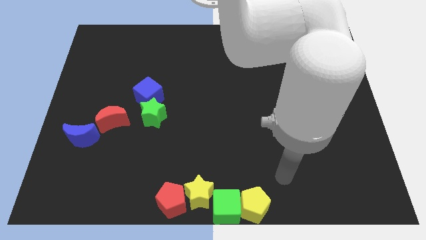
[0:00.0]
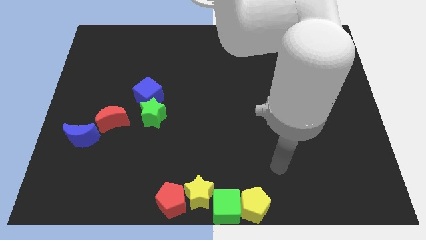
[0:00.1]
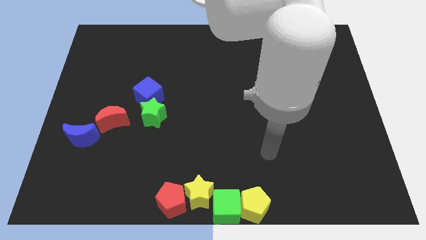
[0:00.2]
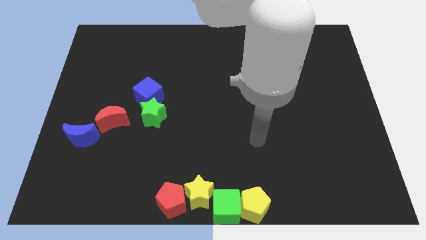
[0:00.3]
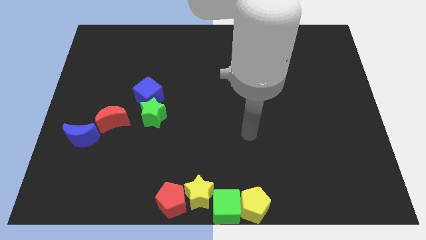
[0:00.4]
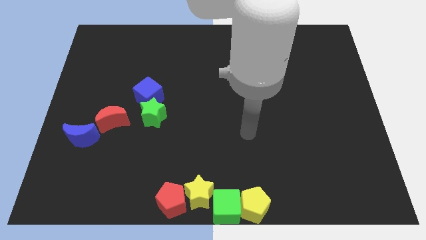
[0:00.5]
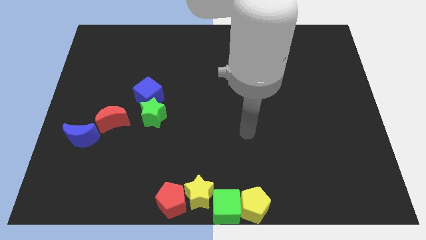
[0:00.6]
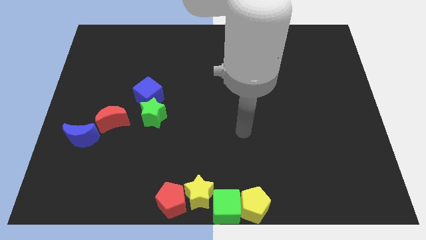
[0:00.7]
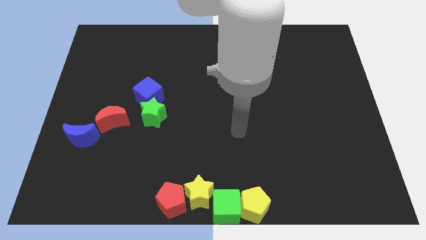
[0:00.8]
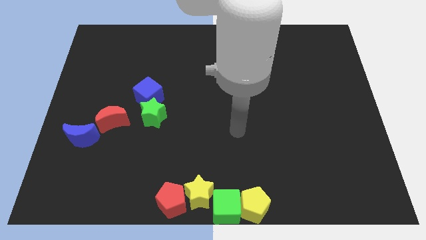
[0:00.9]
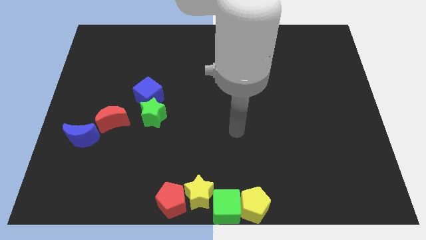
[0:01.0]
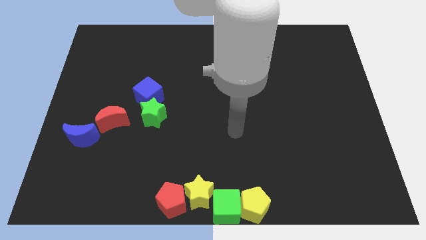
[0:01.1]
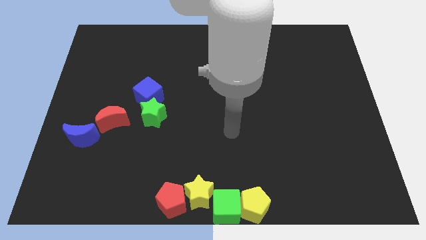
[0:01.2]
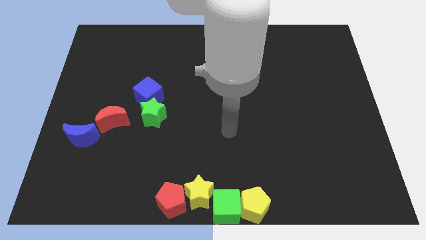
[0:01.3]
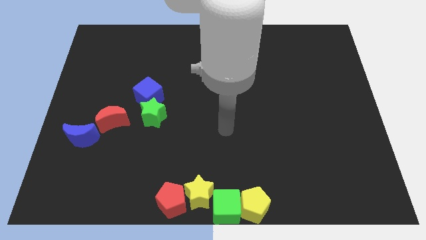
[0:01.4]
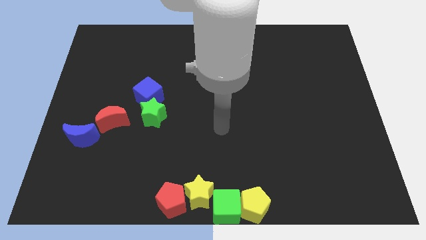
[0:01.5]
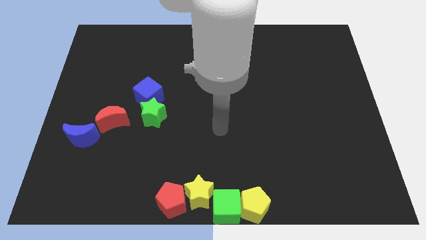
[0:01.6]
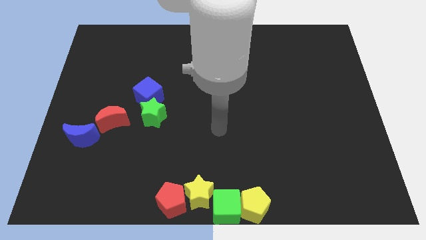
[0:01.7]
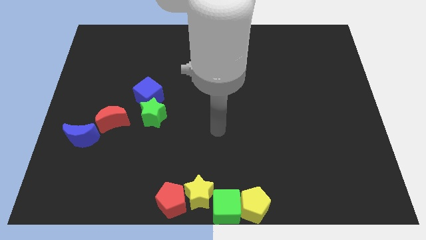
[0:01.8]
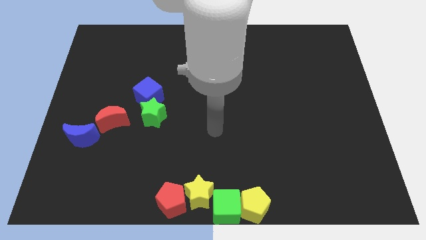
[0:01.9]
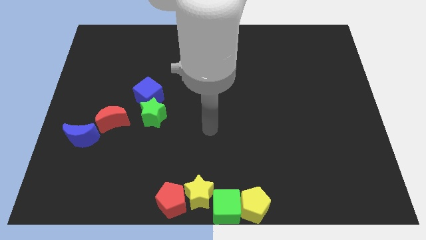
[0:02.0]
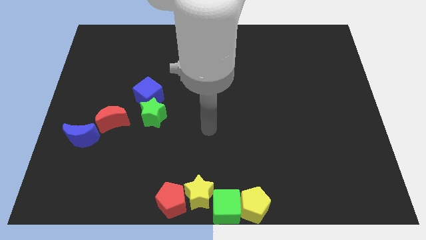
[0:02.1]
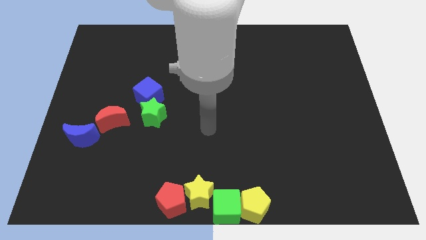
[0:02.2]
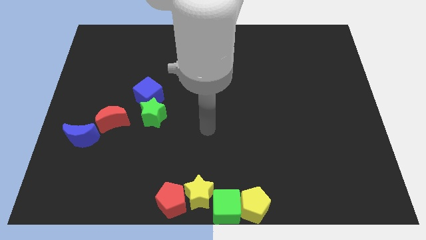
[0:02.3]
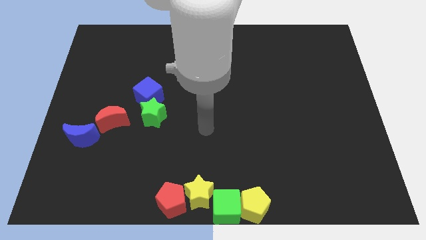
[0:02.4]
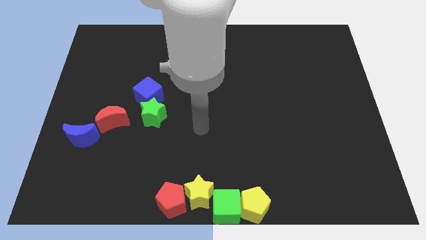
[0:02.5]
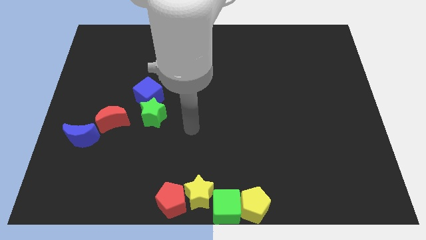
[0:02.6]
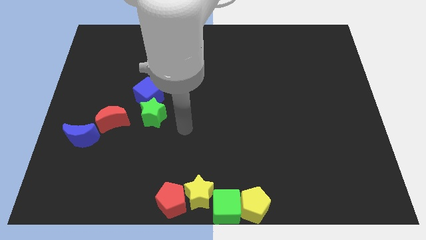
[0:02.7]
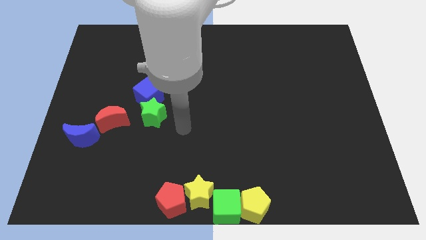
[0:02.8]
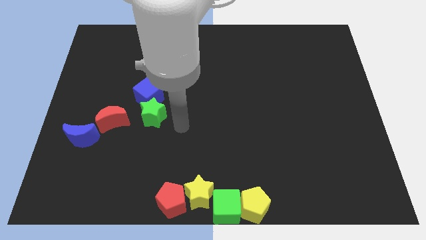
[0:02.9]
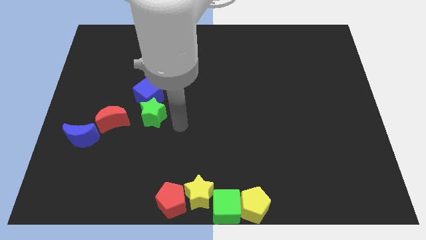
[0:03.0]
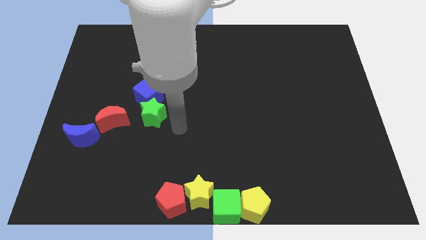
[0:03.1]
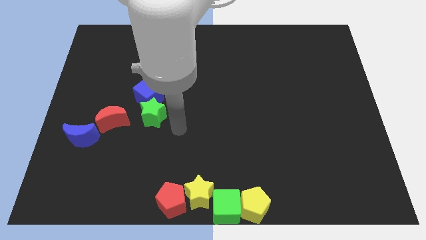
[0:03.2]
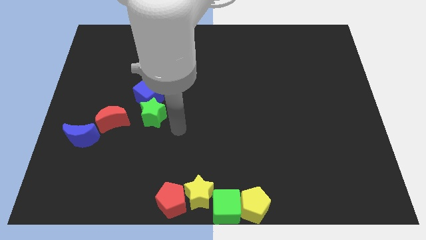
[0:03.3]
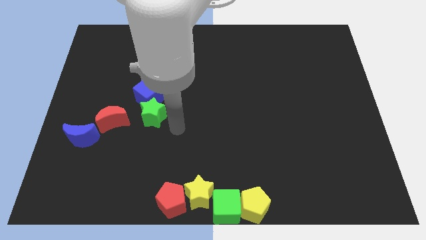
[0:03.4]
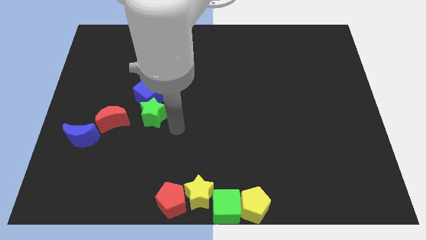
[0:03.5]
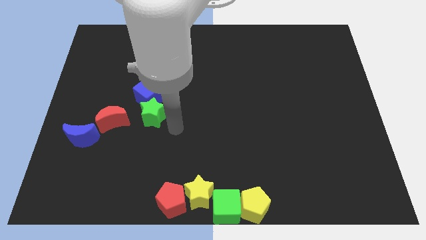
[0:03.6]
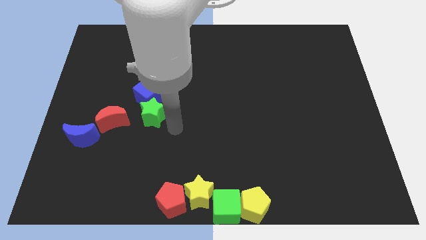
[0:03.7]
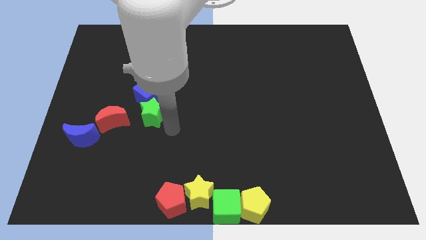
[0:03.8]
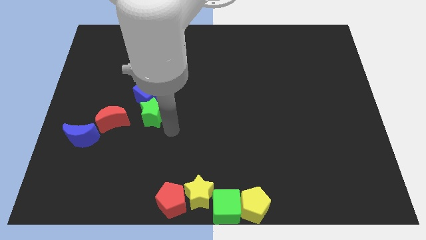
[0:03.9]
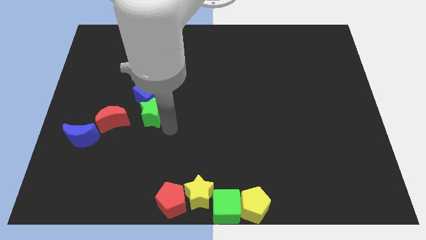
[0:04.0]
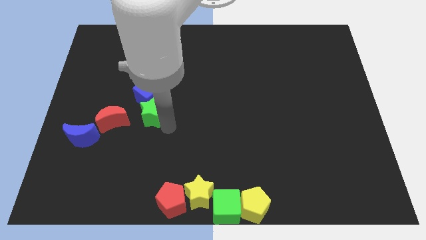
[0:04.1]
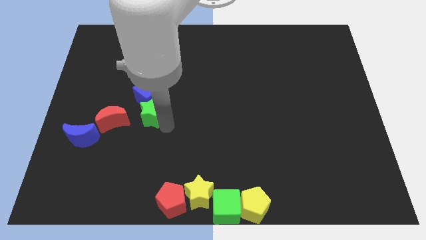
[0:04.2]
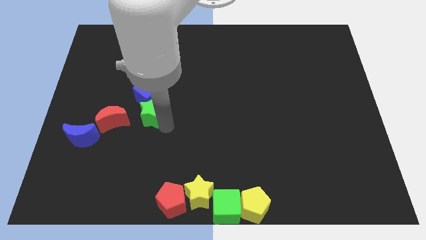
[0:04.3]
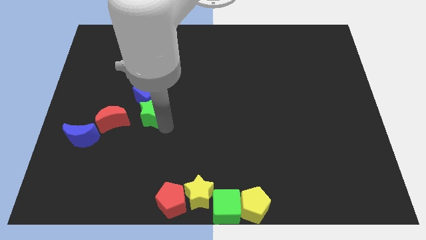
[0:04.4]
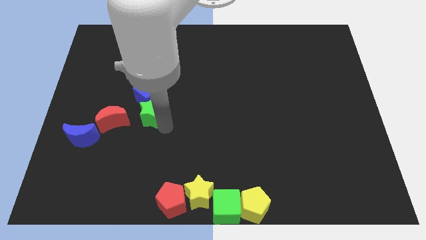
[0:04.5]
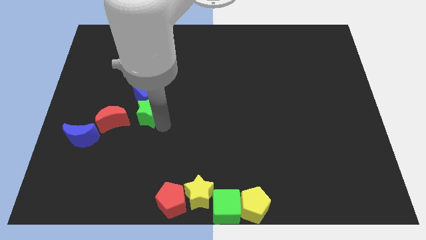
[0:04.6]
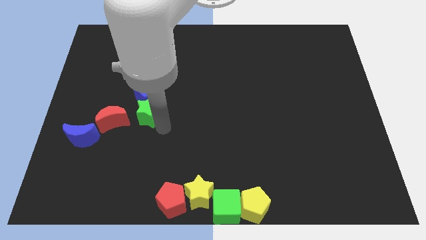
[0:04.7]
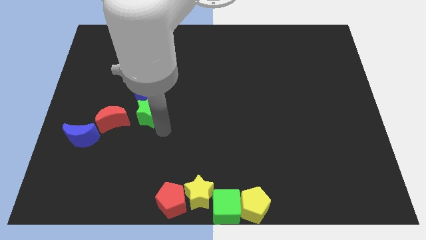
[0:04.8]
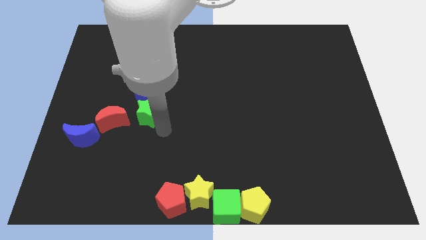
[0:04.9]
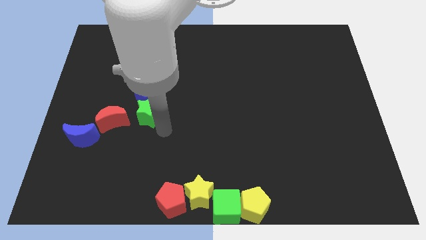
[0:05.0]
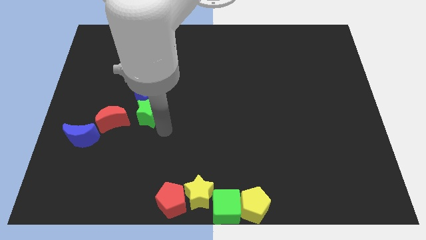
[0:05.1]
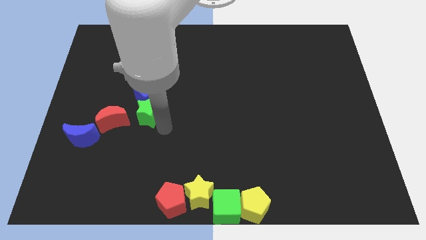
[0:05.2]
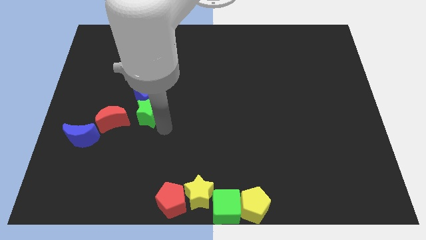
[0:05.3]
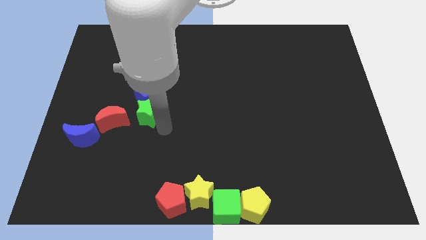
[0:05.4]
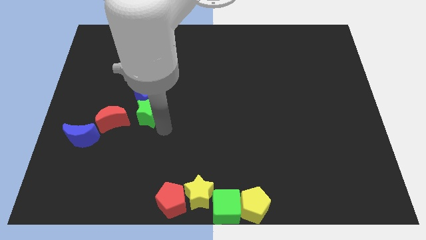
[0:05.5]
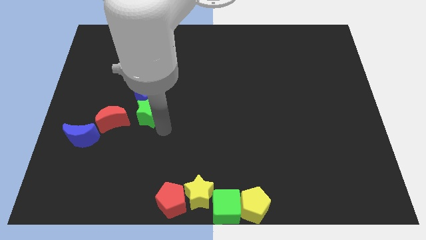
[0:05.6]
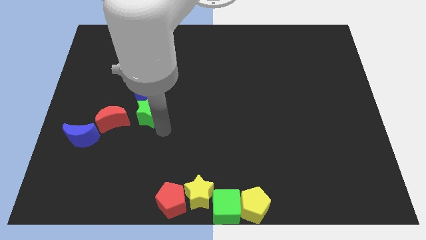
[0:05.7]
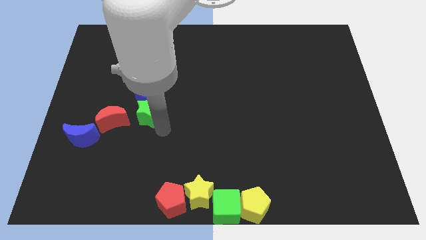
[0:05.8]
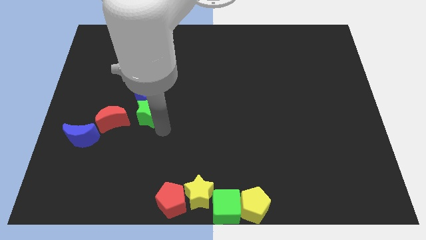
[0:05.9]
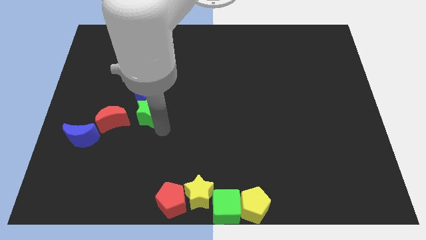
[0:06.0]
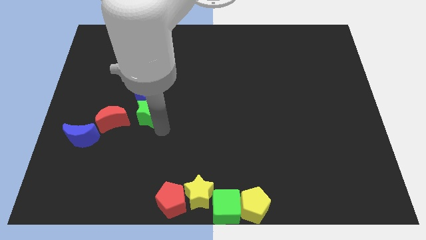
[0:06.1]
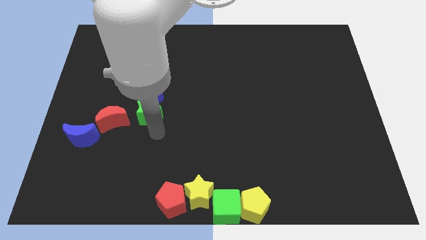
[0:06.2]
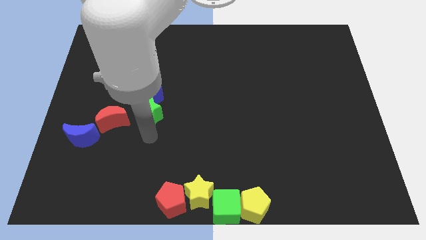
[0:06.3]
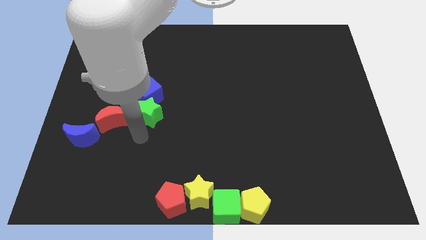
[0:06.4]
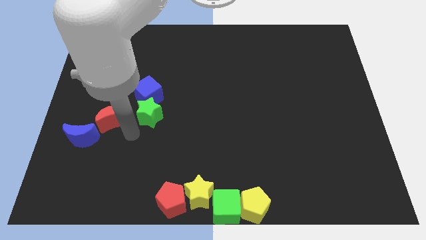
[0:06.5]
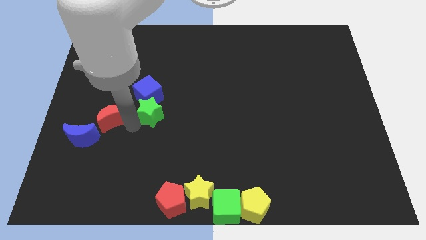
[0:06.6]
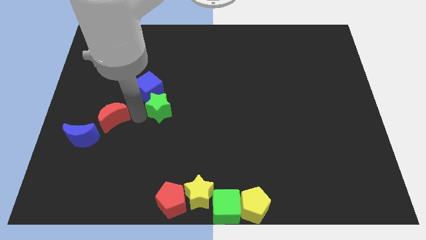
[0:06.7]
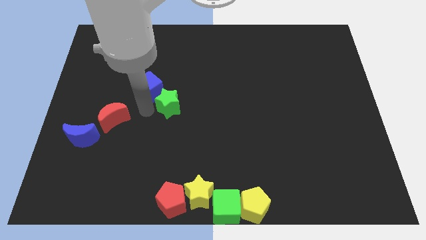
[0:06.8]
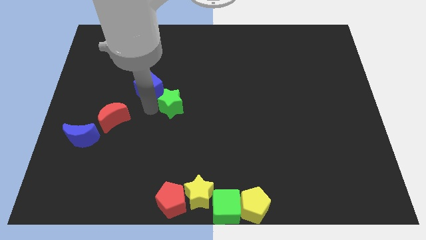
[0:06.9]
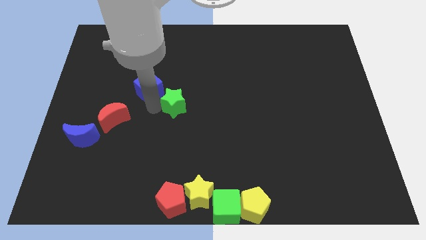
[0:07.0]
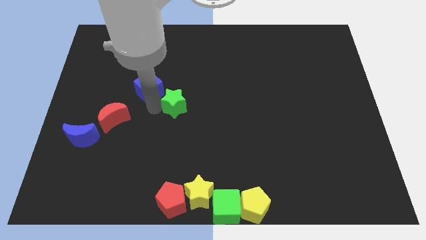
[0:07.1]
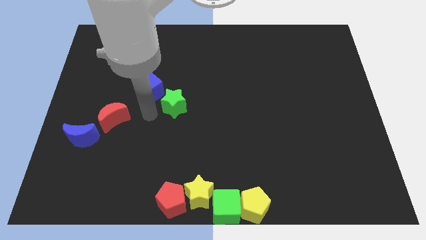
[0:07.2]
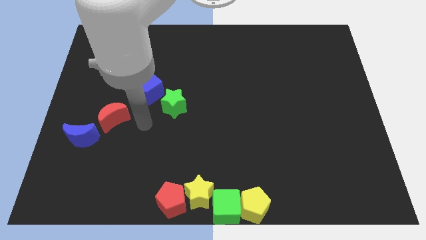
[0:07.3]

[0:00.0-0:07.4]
move the green star towards the center of the board

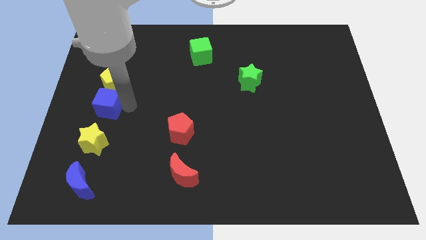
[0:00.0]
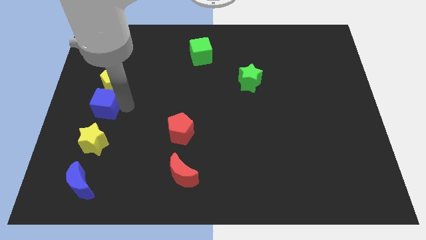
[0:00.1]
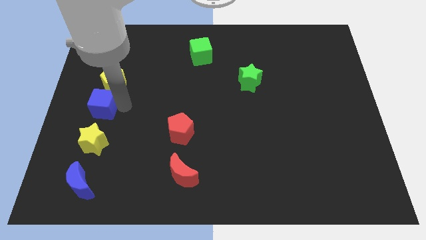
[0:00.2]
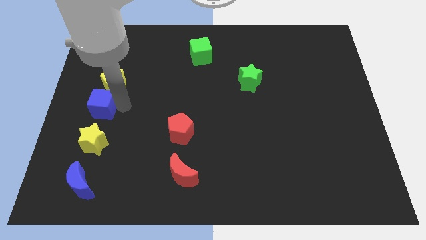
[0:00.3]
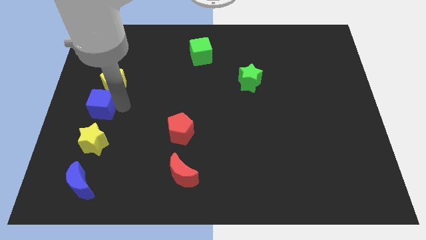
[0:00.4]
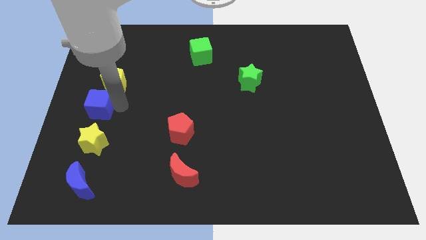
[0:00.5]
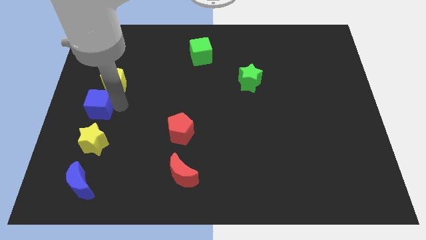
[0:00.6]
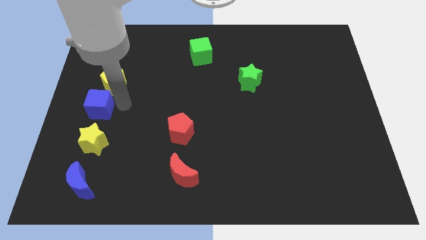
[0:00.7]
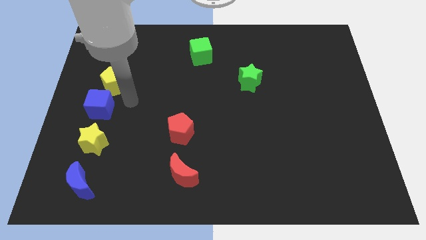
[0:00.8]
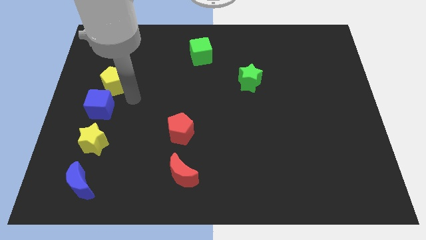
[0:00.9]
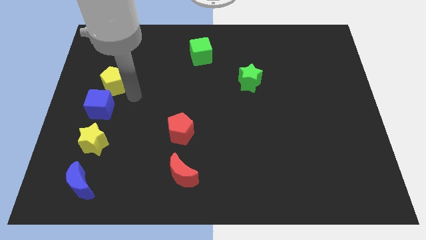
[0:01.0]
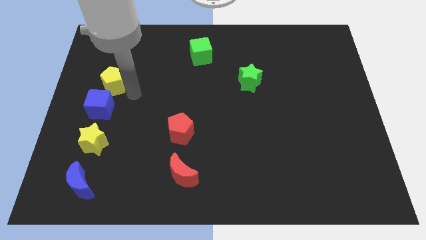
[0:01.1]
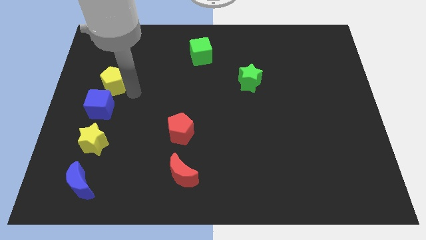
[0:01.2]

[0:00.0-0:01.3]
adjust the blue cube

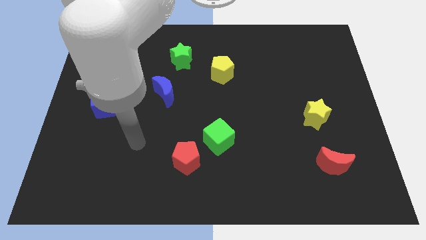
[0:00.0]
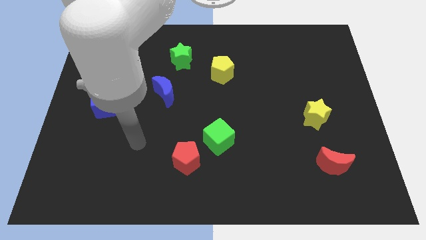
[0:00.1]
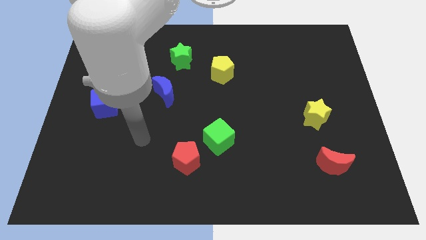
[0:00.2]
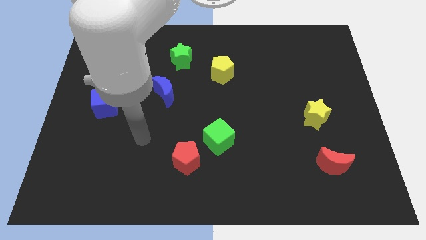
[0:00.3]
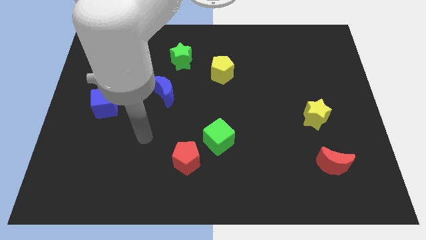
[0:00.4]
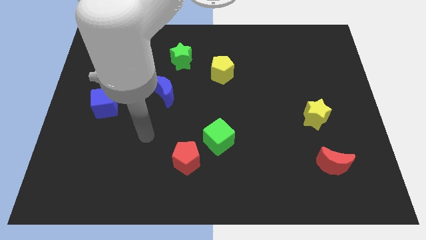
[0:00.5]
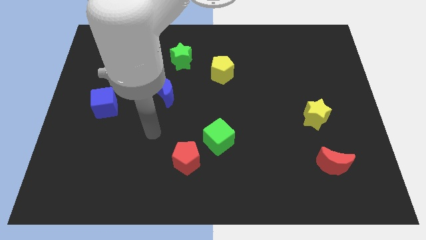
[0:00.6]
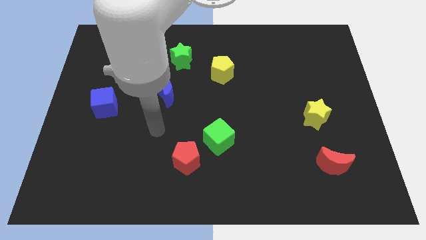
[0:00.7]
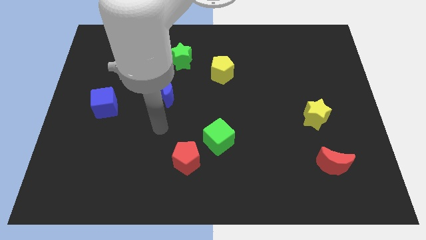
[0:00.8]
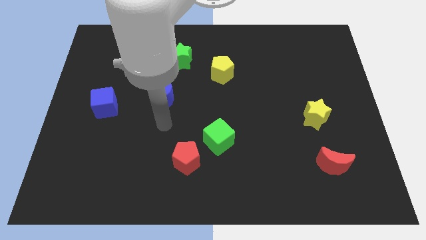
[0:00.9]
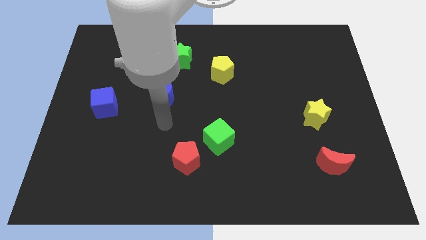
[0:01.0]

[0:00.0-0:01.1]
place your arm below blue moon
